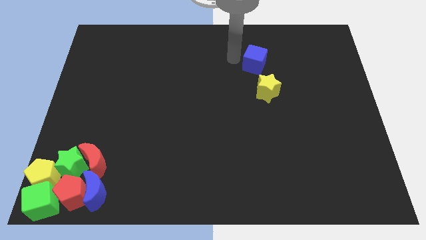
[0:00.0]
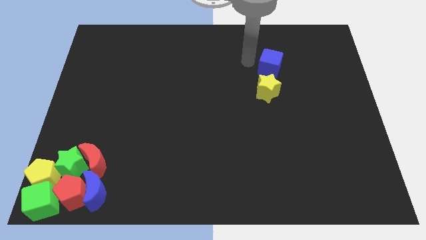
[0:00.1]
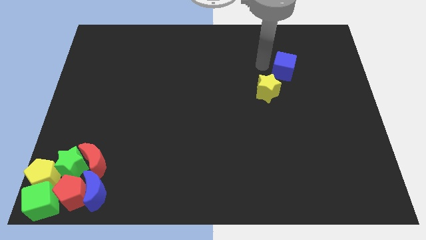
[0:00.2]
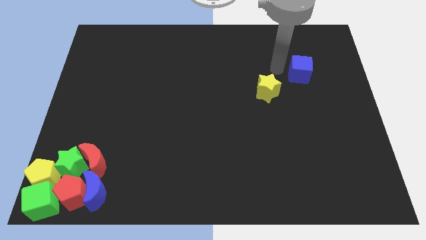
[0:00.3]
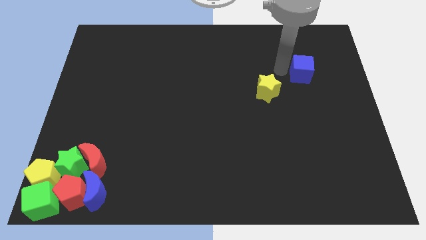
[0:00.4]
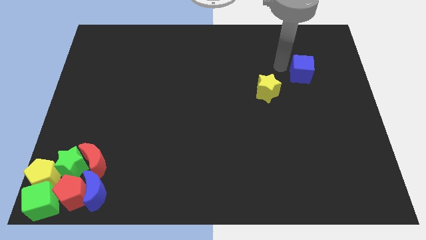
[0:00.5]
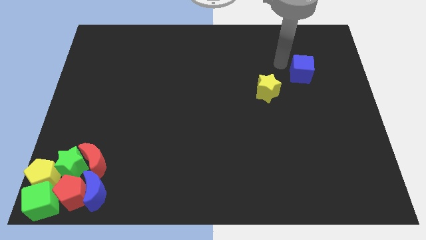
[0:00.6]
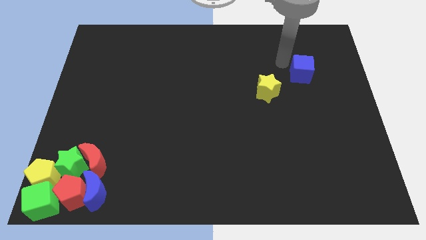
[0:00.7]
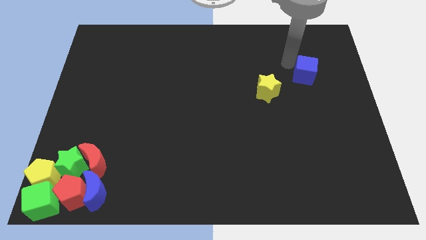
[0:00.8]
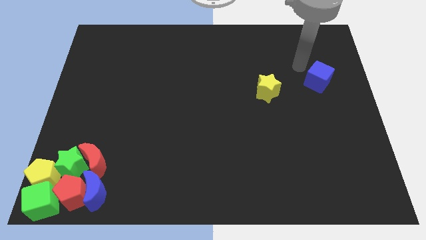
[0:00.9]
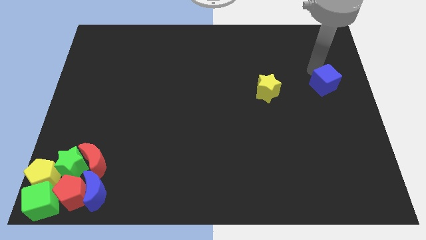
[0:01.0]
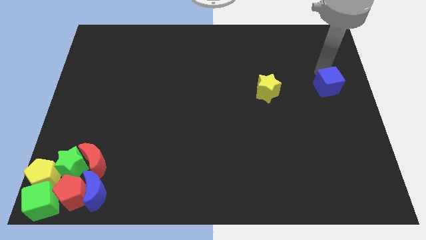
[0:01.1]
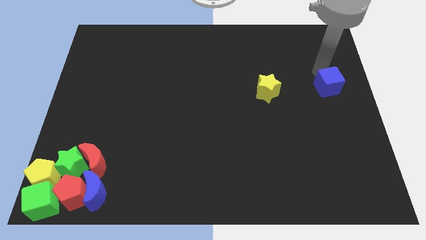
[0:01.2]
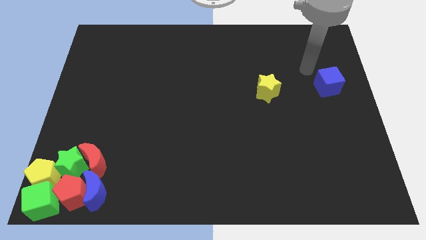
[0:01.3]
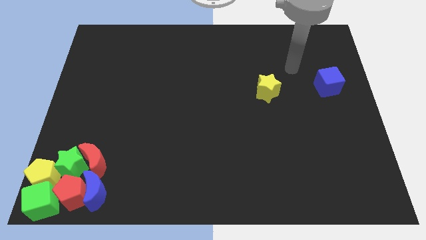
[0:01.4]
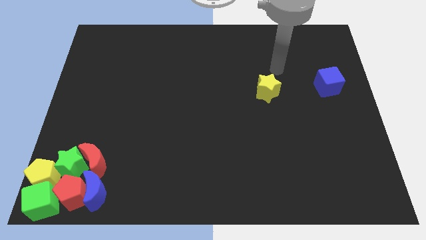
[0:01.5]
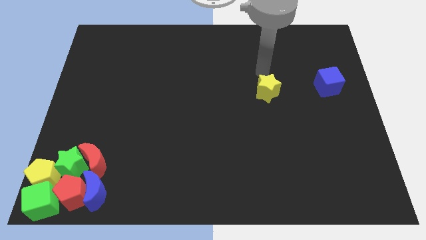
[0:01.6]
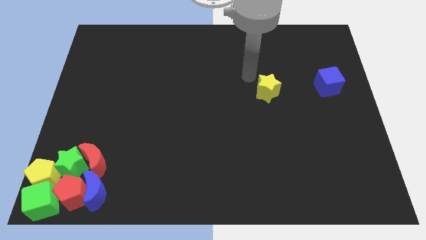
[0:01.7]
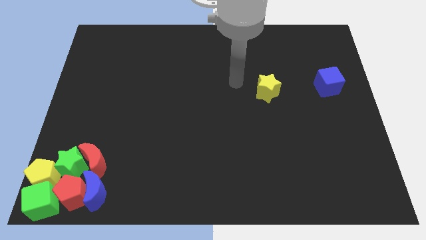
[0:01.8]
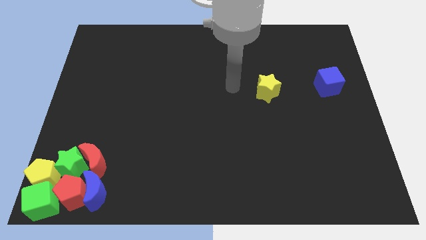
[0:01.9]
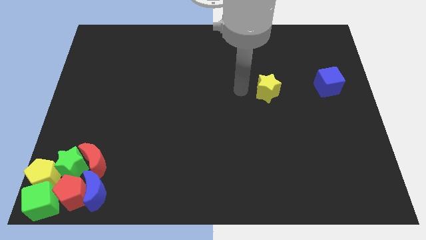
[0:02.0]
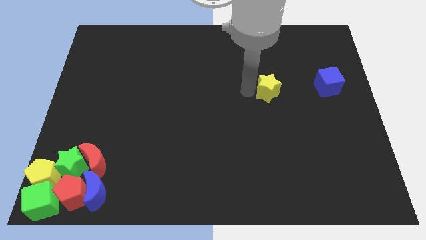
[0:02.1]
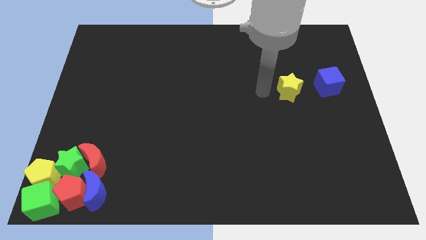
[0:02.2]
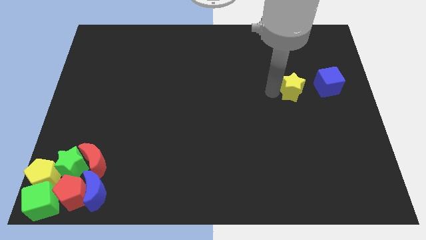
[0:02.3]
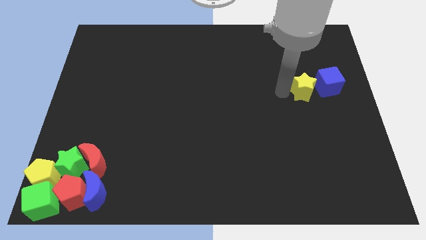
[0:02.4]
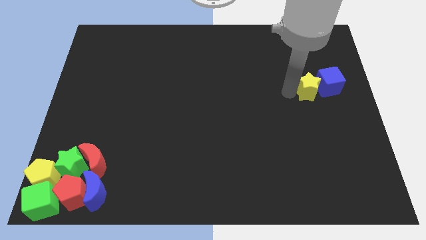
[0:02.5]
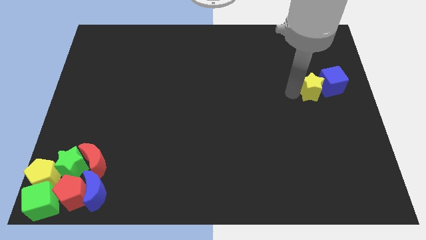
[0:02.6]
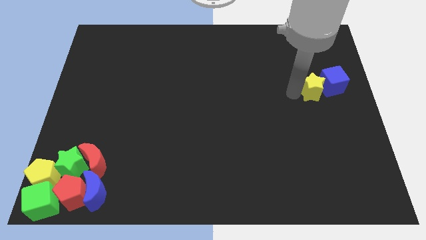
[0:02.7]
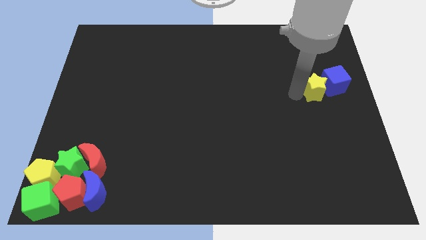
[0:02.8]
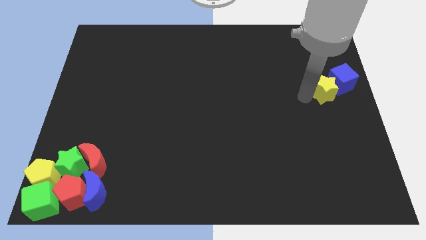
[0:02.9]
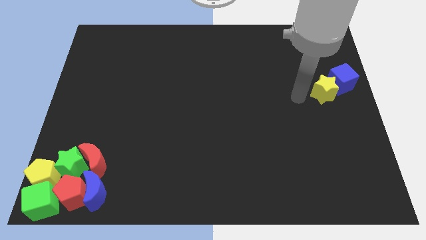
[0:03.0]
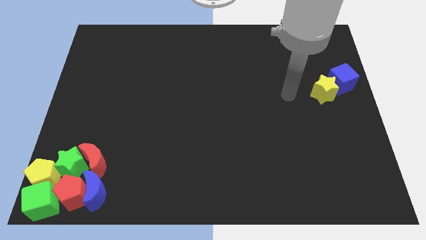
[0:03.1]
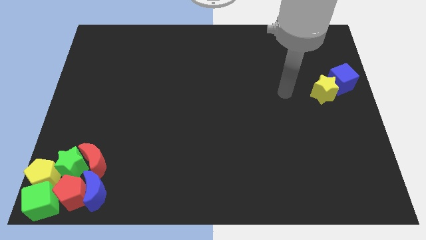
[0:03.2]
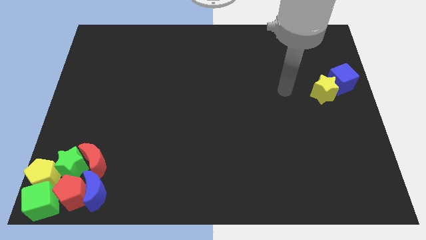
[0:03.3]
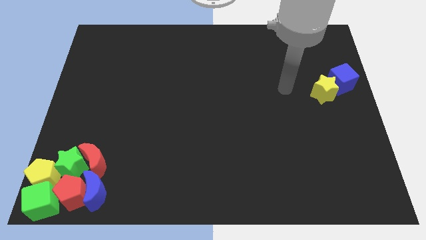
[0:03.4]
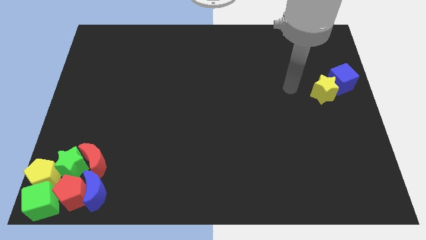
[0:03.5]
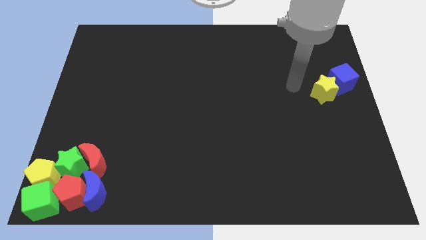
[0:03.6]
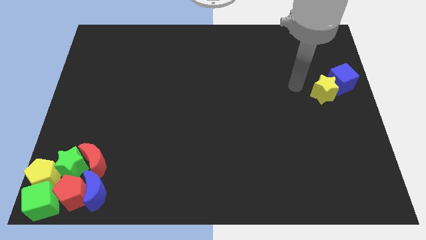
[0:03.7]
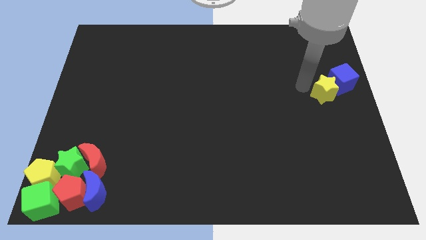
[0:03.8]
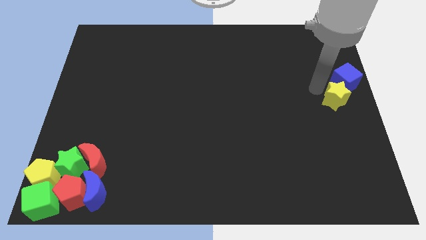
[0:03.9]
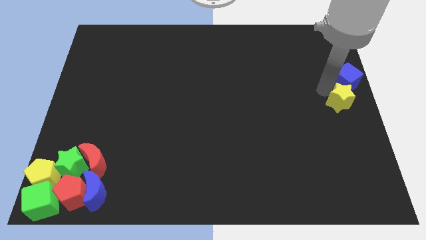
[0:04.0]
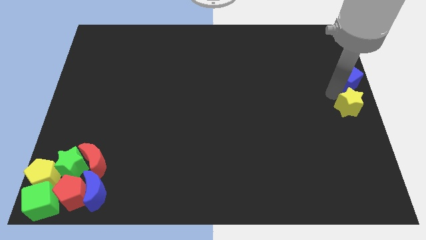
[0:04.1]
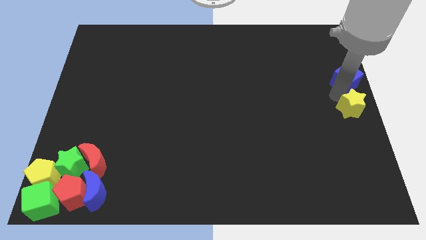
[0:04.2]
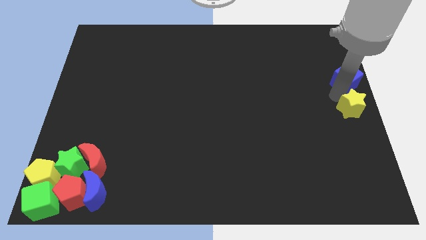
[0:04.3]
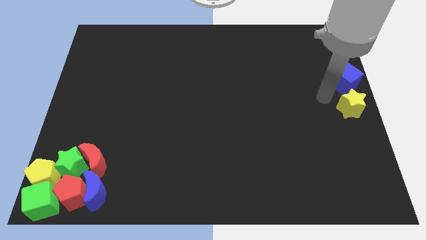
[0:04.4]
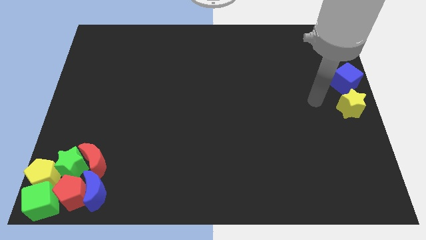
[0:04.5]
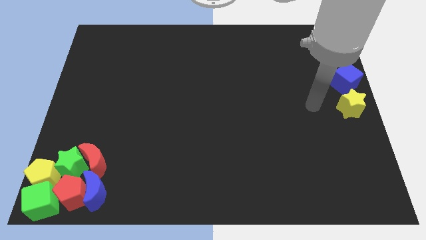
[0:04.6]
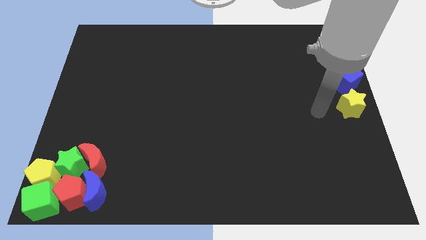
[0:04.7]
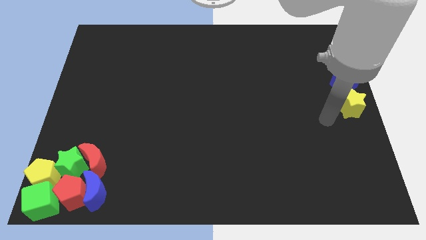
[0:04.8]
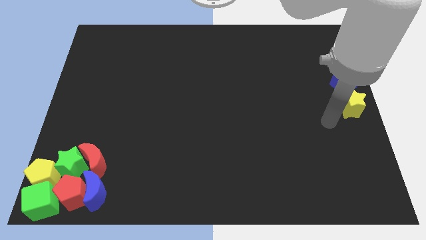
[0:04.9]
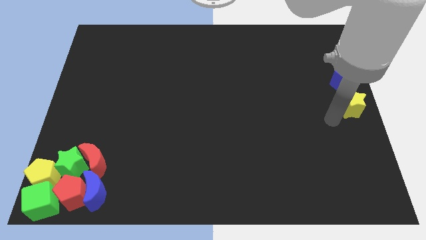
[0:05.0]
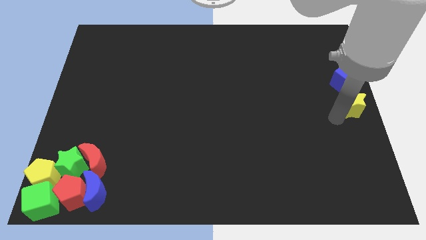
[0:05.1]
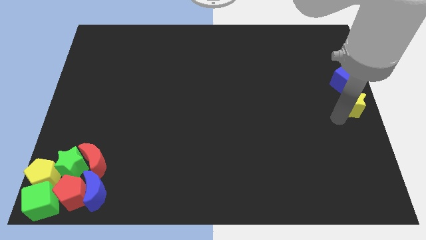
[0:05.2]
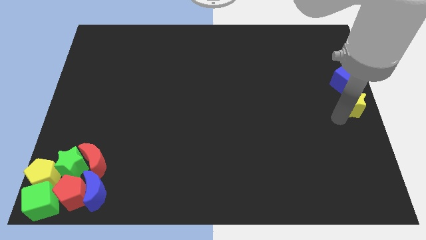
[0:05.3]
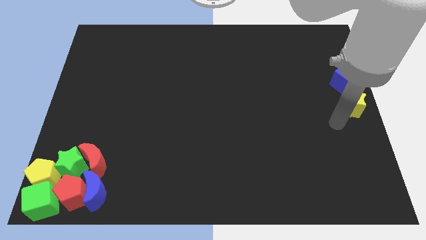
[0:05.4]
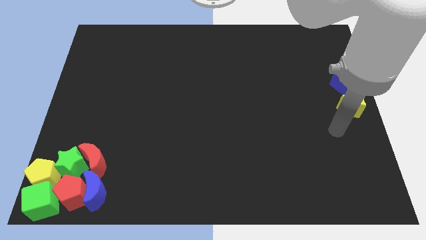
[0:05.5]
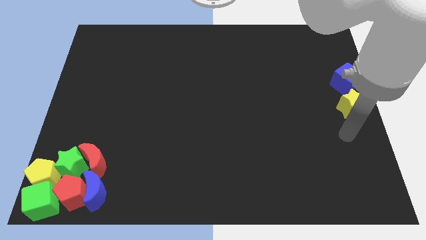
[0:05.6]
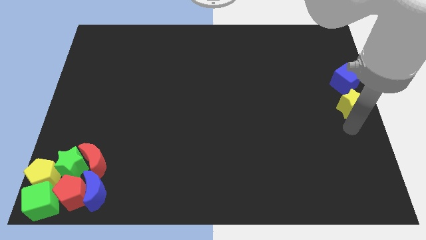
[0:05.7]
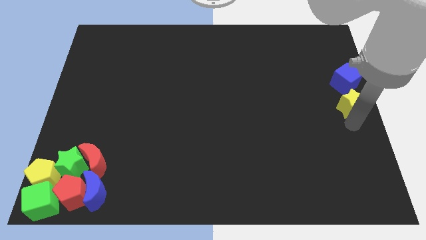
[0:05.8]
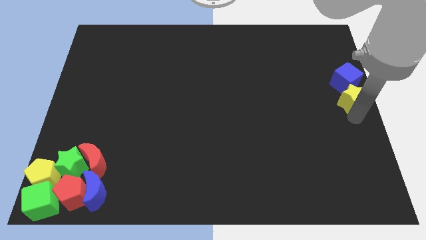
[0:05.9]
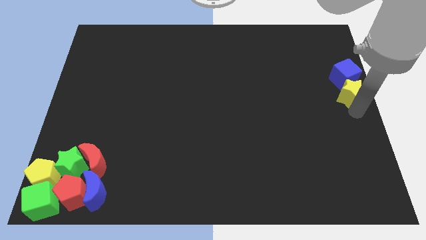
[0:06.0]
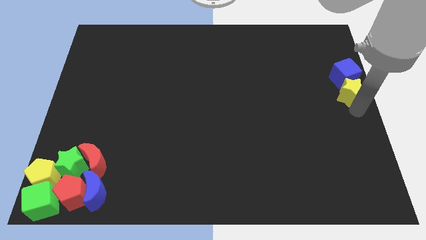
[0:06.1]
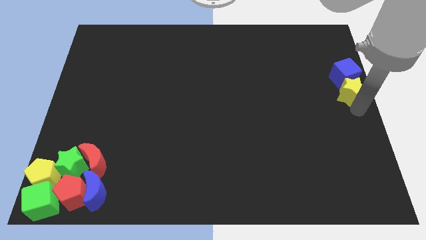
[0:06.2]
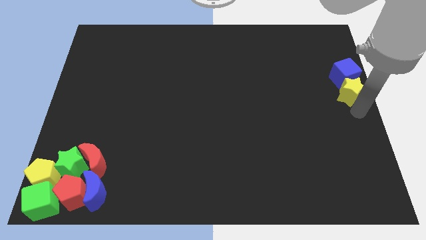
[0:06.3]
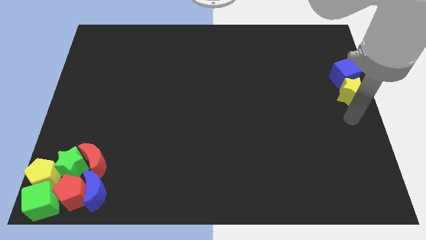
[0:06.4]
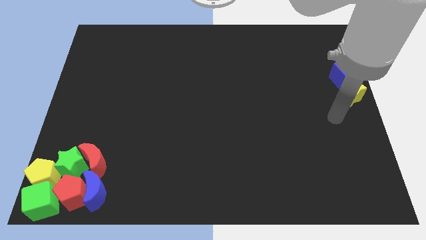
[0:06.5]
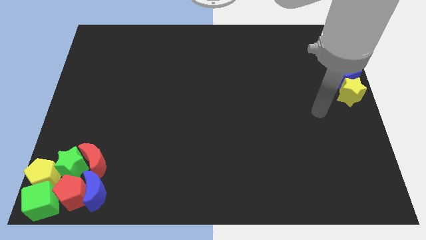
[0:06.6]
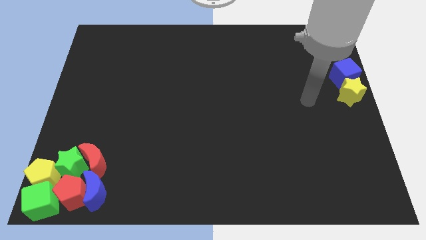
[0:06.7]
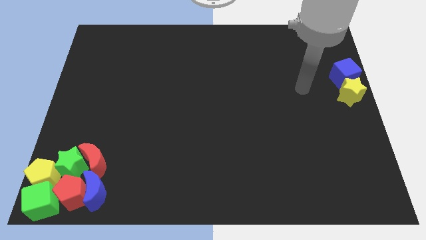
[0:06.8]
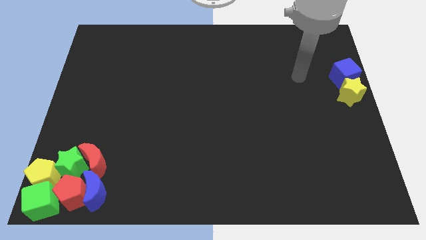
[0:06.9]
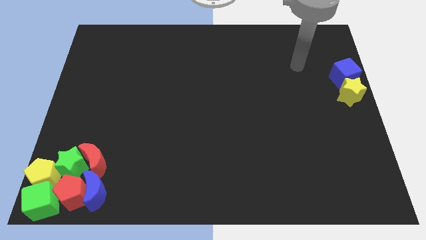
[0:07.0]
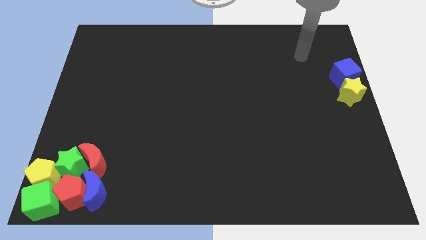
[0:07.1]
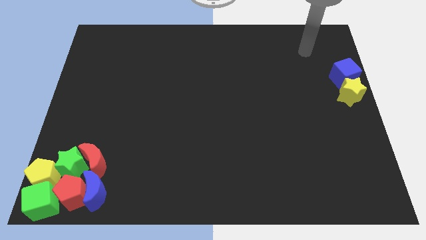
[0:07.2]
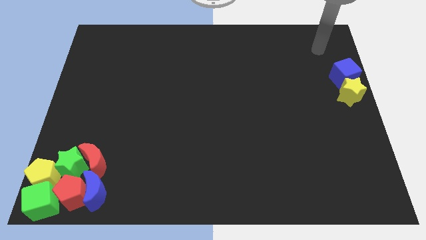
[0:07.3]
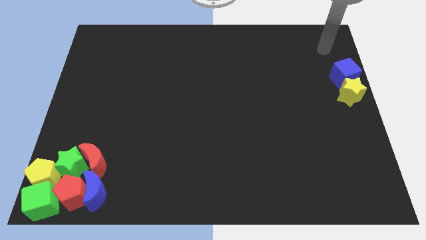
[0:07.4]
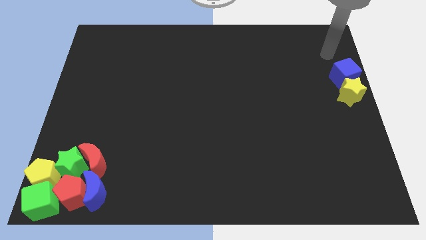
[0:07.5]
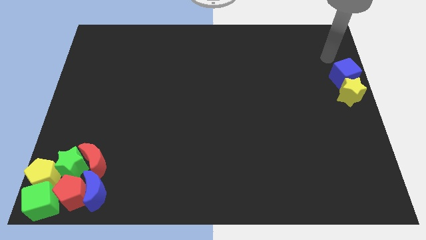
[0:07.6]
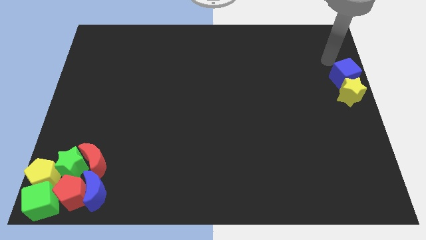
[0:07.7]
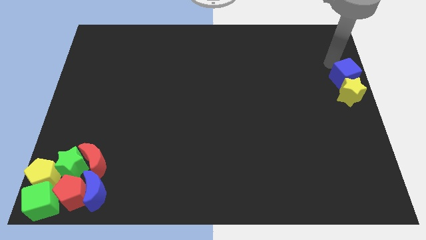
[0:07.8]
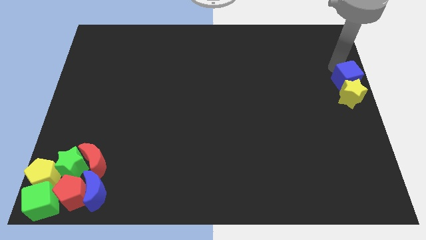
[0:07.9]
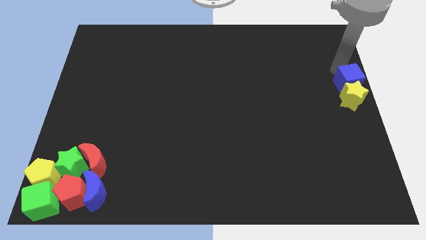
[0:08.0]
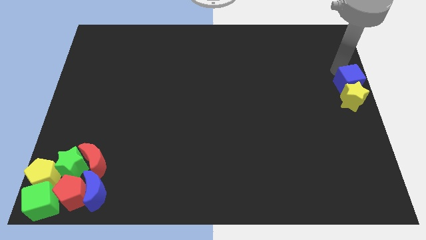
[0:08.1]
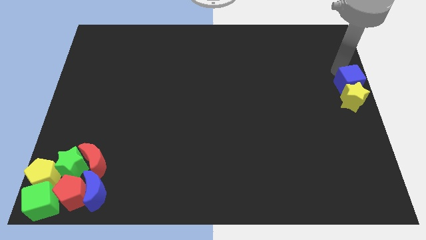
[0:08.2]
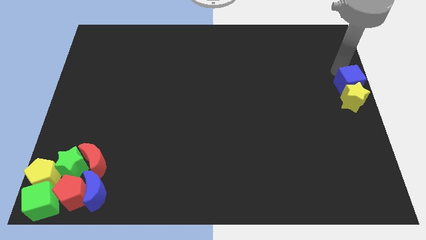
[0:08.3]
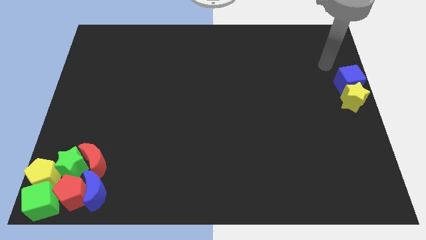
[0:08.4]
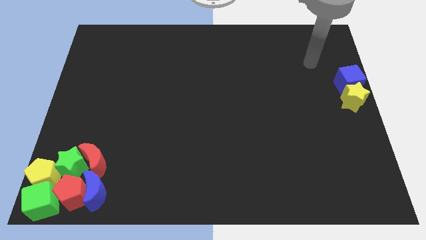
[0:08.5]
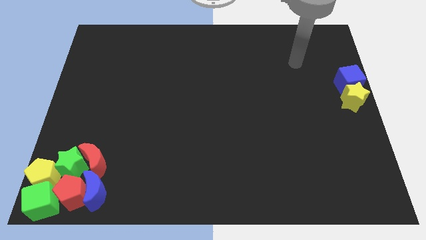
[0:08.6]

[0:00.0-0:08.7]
form a vertical line with blue cube and yellow star at the right center of the board

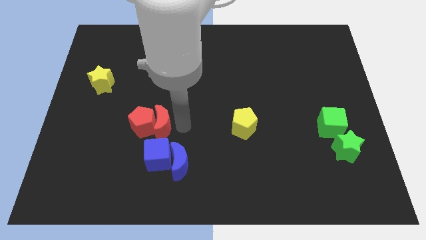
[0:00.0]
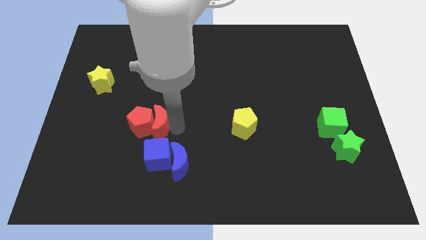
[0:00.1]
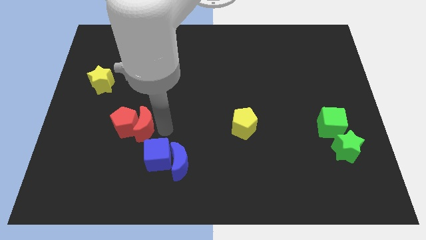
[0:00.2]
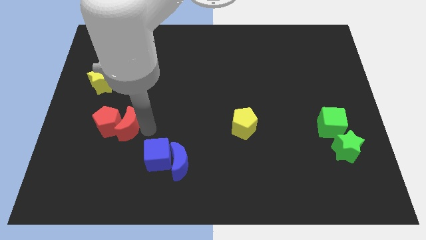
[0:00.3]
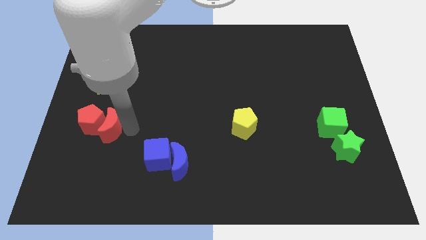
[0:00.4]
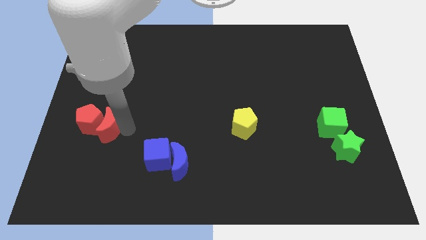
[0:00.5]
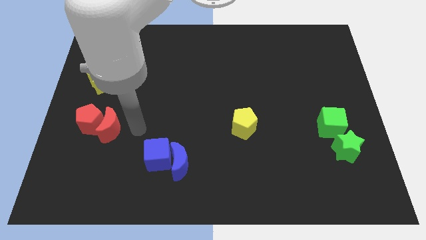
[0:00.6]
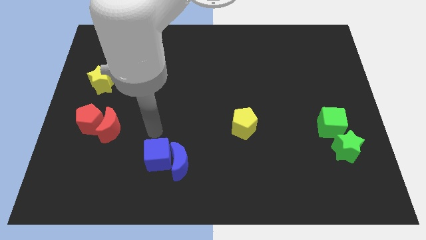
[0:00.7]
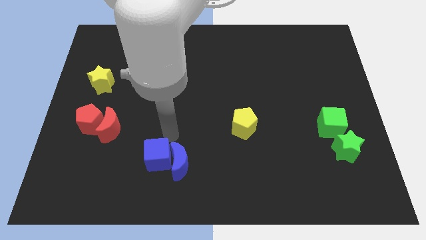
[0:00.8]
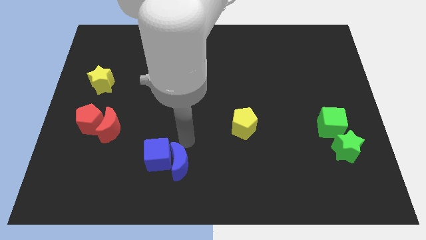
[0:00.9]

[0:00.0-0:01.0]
place red crescent and red pentagon below the yellow star
